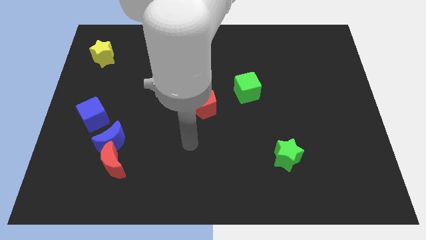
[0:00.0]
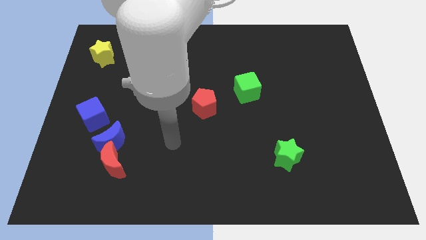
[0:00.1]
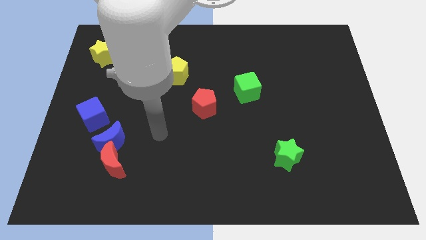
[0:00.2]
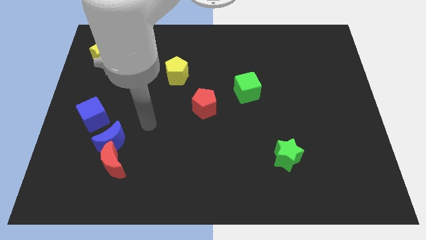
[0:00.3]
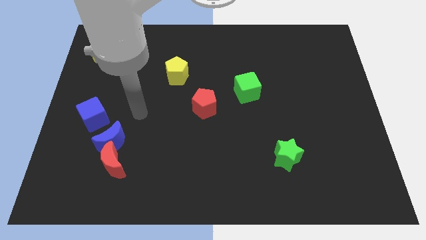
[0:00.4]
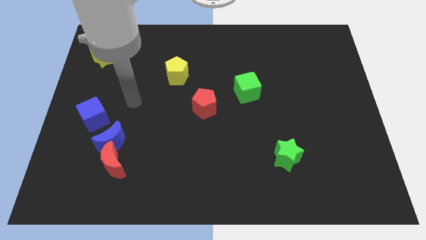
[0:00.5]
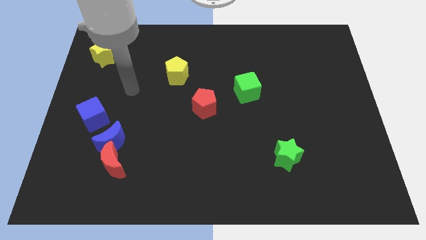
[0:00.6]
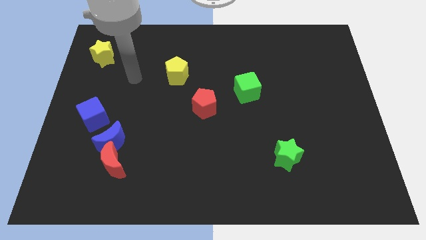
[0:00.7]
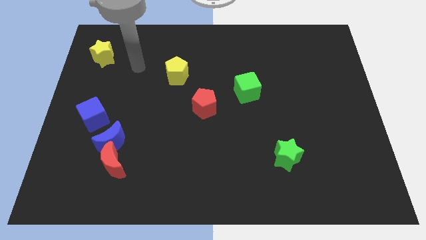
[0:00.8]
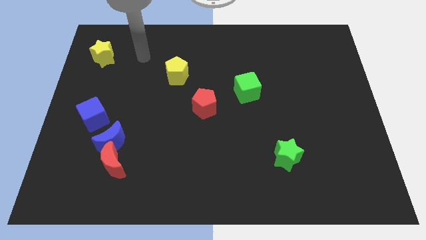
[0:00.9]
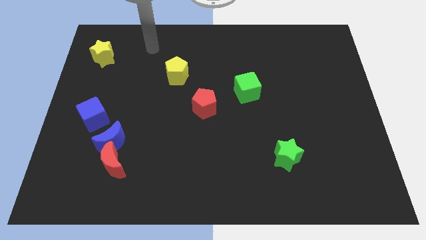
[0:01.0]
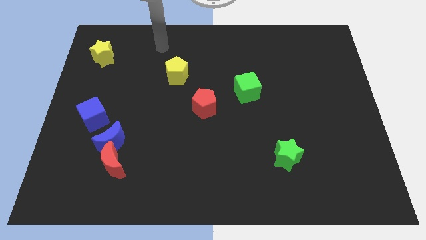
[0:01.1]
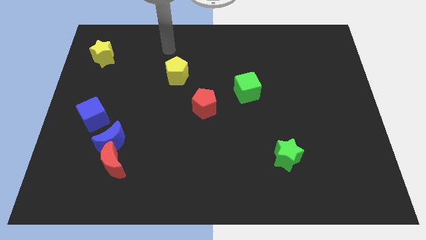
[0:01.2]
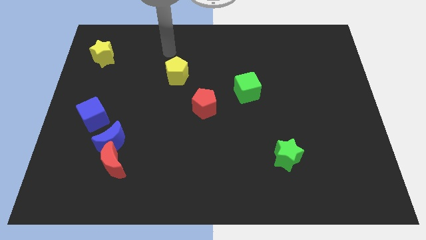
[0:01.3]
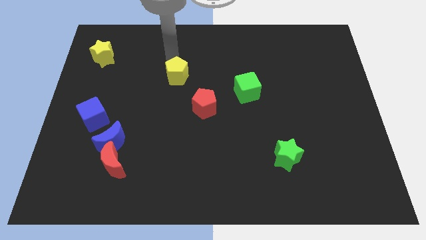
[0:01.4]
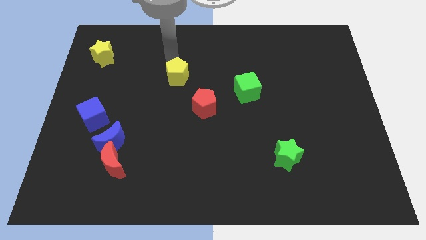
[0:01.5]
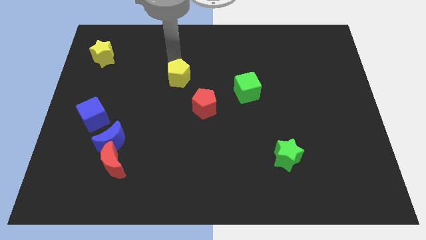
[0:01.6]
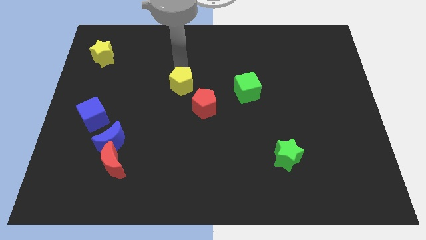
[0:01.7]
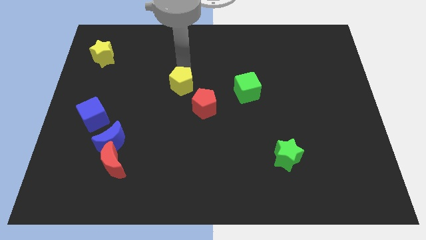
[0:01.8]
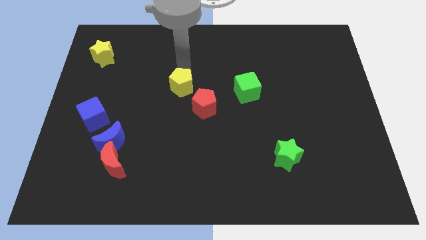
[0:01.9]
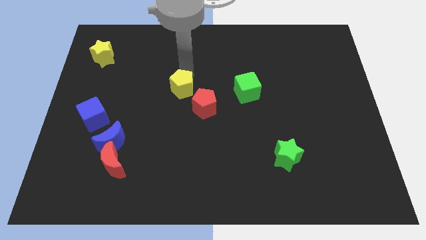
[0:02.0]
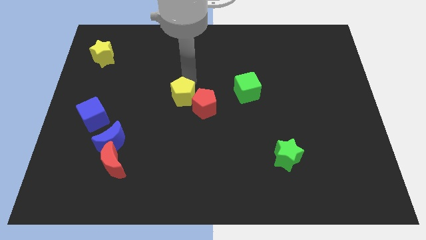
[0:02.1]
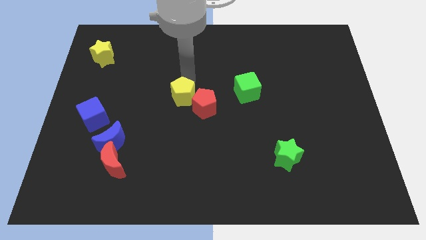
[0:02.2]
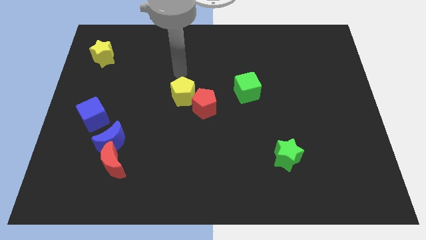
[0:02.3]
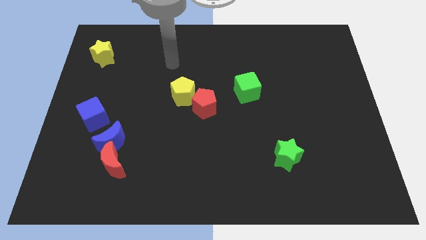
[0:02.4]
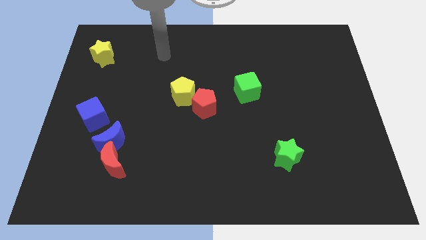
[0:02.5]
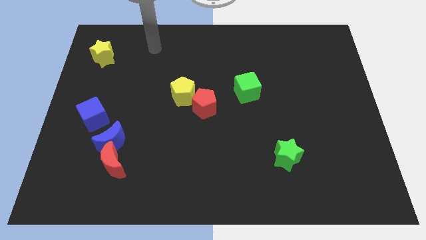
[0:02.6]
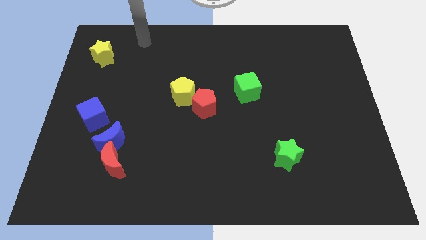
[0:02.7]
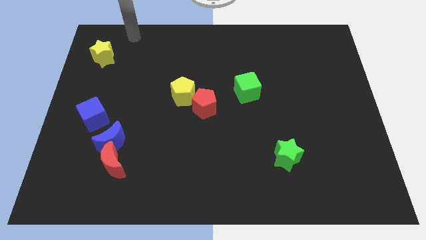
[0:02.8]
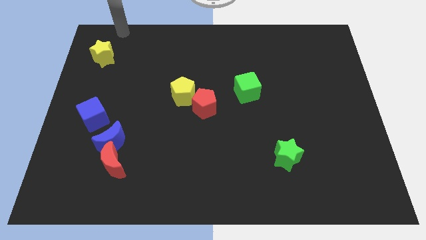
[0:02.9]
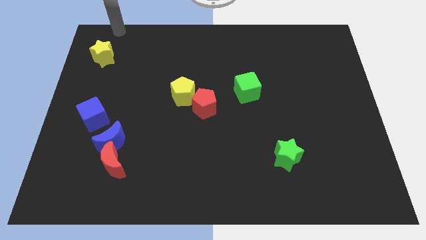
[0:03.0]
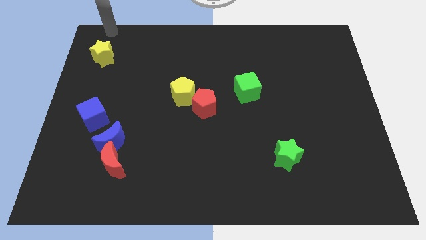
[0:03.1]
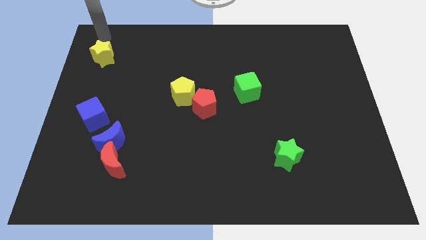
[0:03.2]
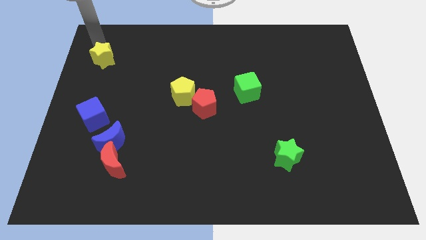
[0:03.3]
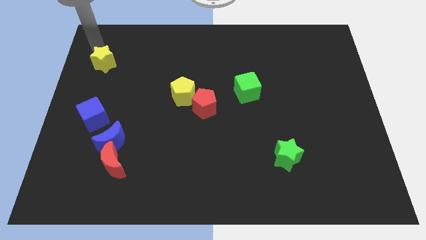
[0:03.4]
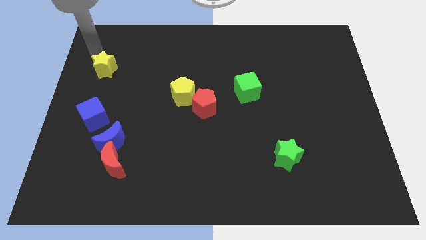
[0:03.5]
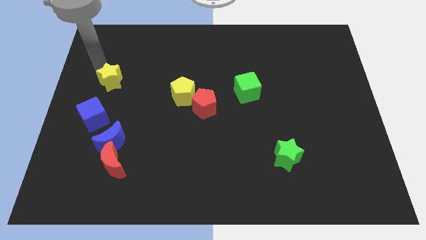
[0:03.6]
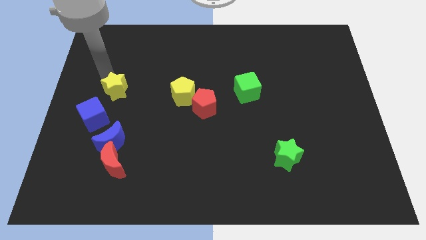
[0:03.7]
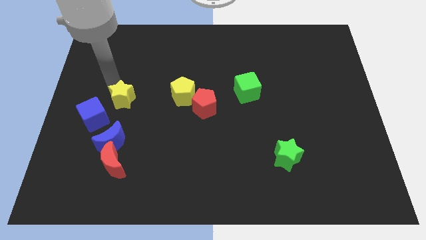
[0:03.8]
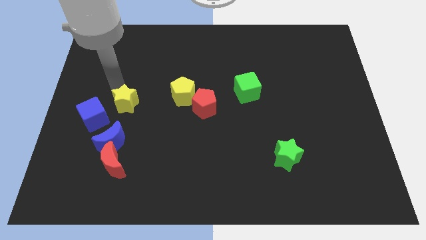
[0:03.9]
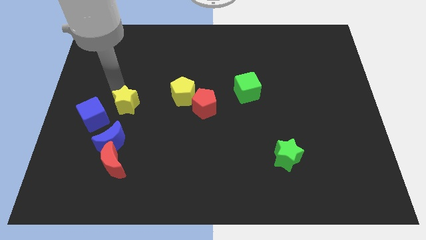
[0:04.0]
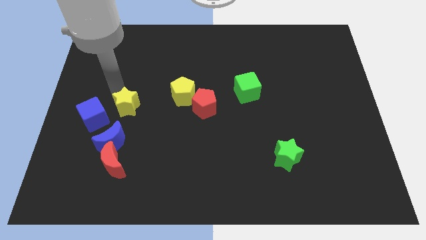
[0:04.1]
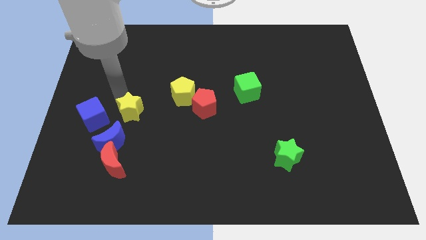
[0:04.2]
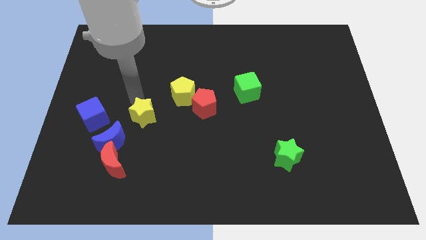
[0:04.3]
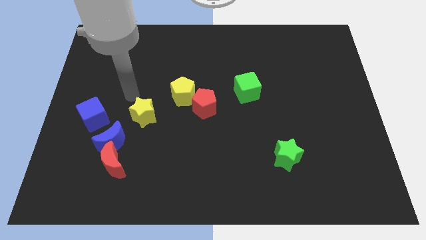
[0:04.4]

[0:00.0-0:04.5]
move the yellow star to the top side of the blue moon

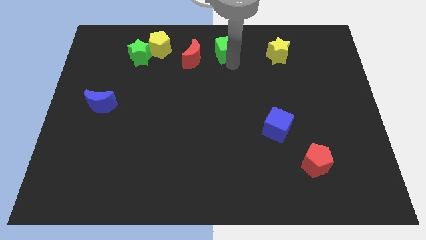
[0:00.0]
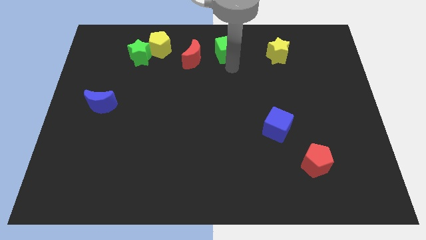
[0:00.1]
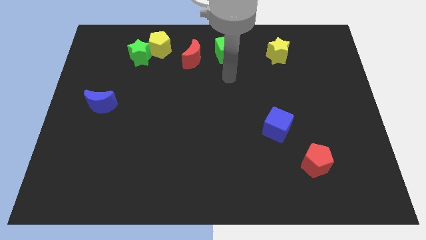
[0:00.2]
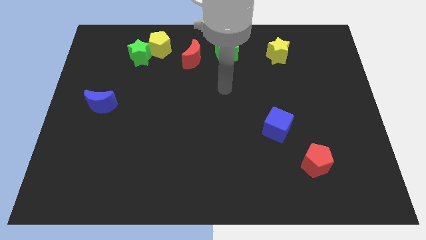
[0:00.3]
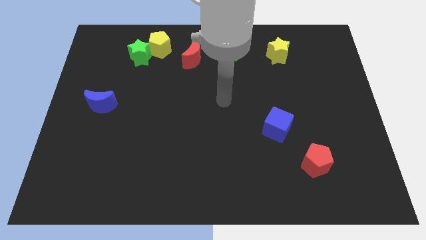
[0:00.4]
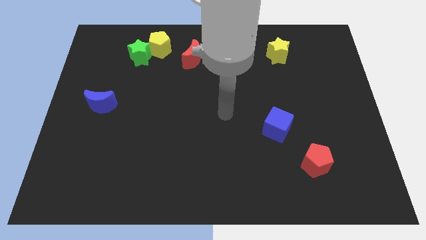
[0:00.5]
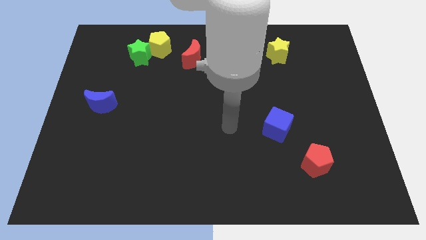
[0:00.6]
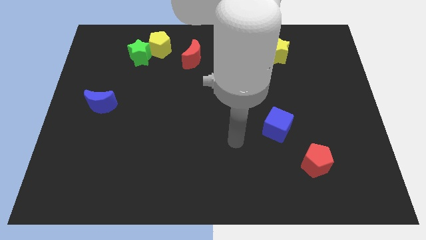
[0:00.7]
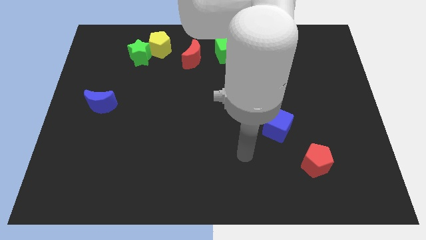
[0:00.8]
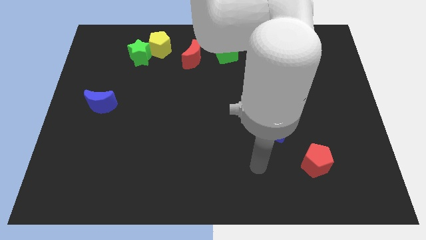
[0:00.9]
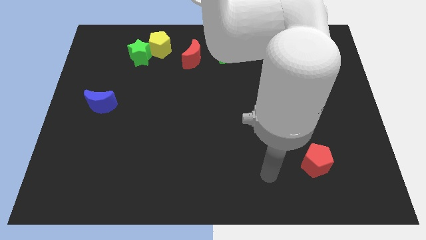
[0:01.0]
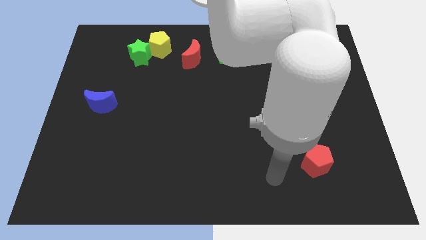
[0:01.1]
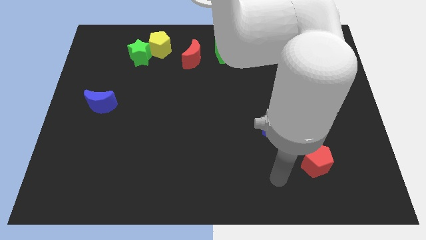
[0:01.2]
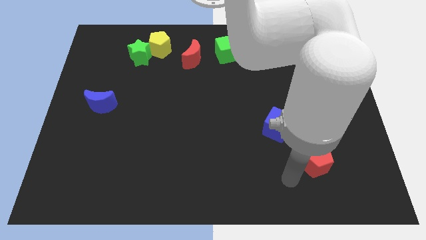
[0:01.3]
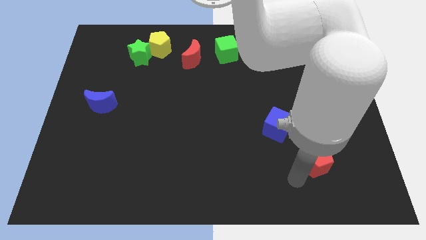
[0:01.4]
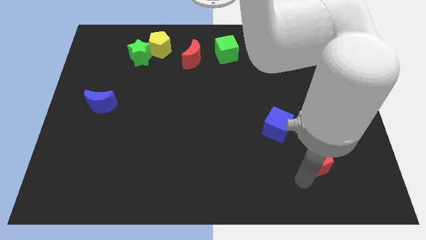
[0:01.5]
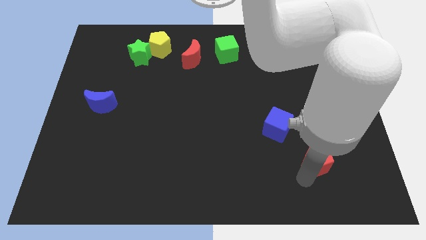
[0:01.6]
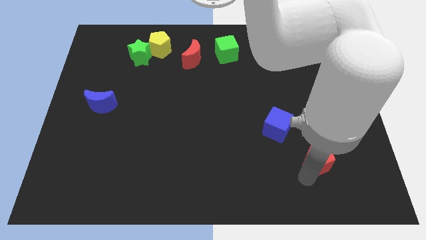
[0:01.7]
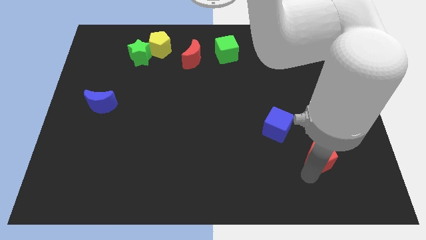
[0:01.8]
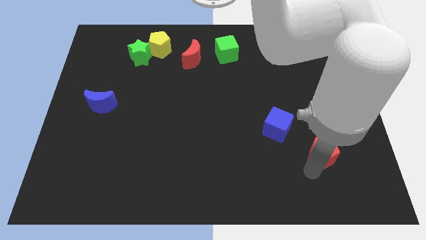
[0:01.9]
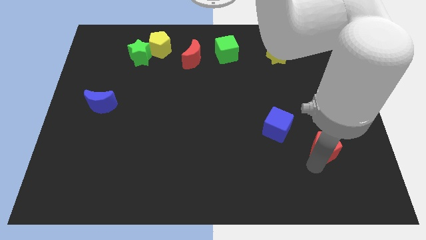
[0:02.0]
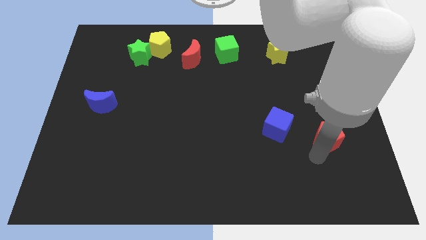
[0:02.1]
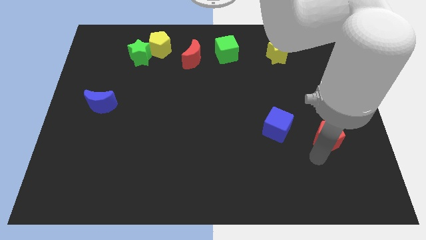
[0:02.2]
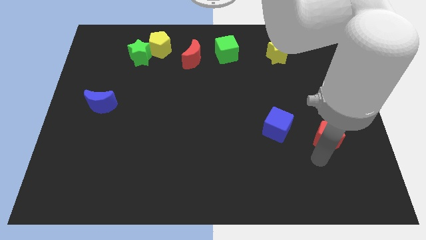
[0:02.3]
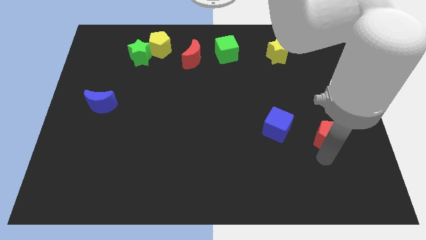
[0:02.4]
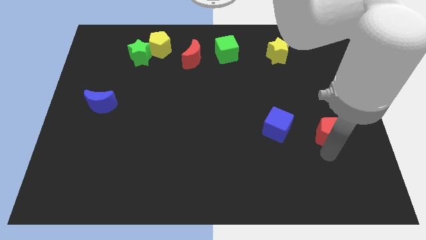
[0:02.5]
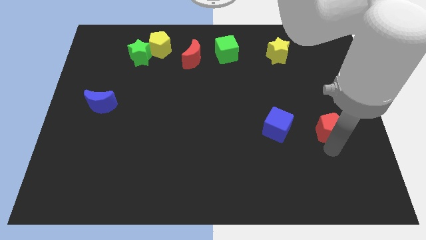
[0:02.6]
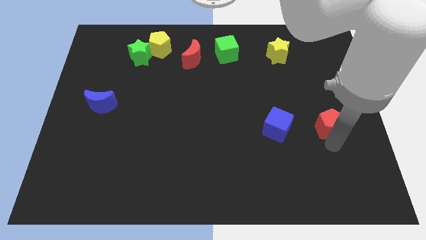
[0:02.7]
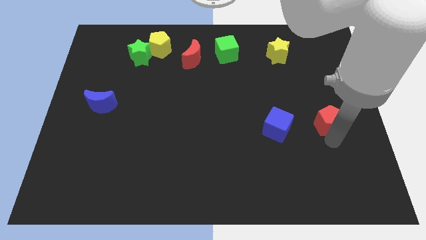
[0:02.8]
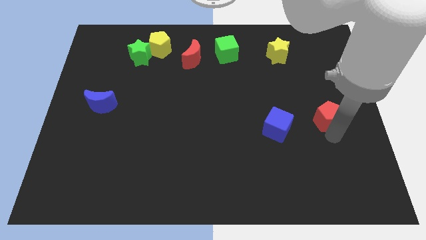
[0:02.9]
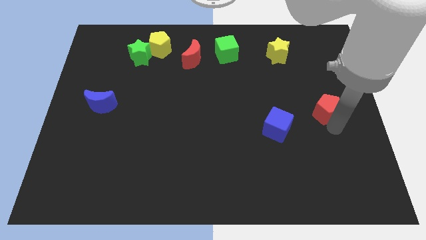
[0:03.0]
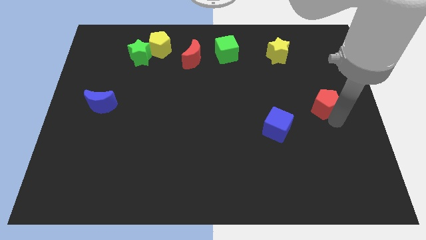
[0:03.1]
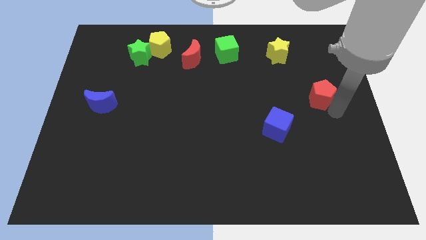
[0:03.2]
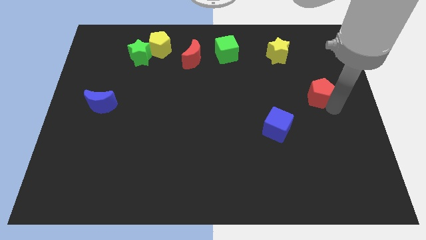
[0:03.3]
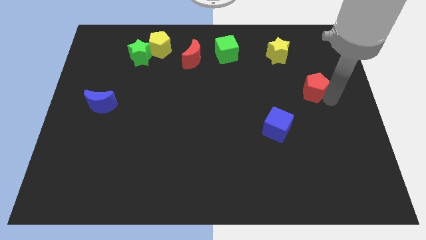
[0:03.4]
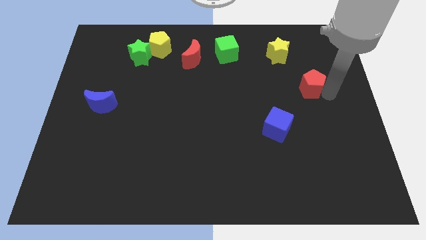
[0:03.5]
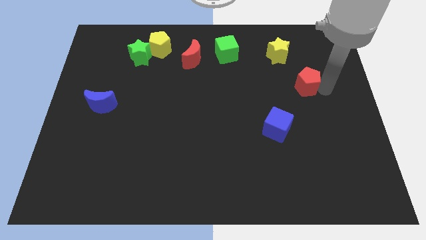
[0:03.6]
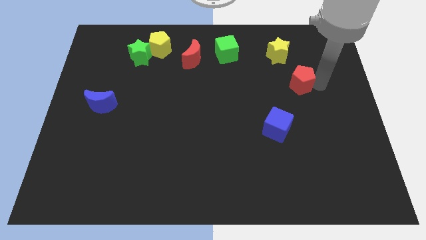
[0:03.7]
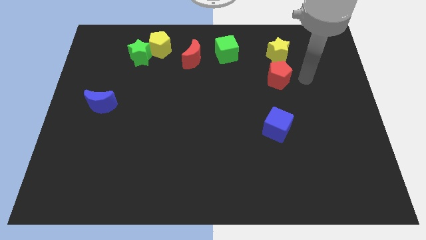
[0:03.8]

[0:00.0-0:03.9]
put the red crescent below the yellow star

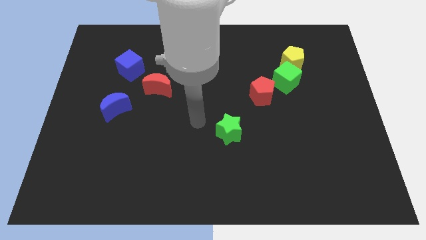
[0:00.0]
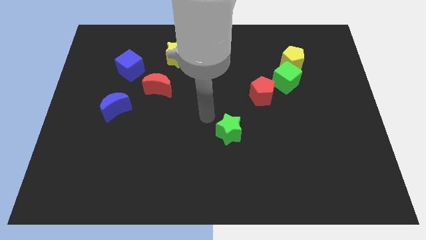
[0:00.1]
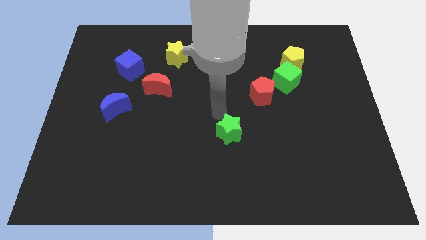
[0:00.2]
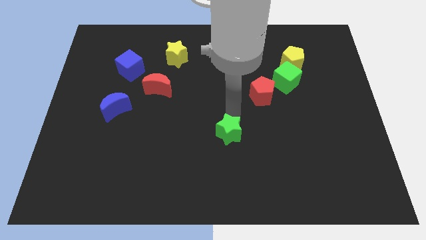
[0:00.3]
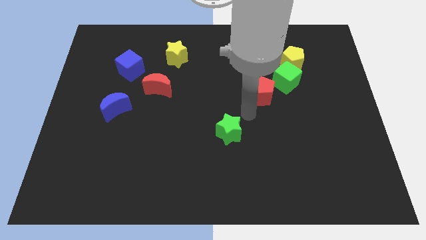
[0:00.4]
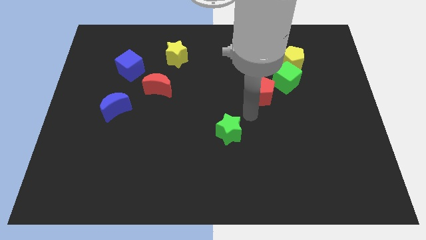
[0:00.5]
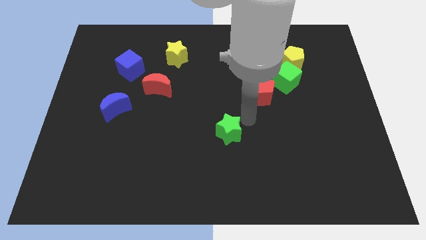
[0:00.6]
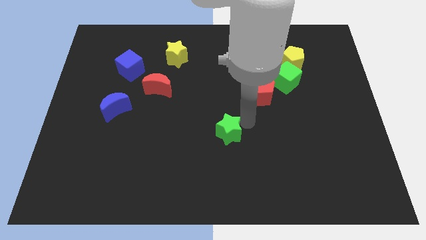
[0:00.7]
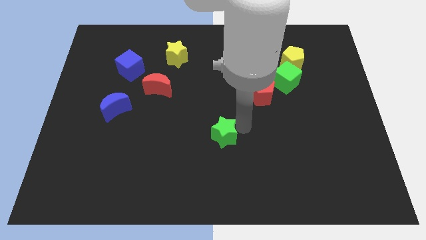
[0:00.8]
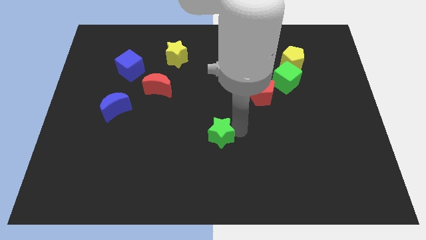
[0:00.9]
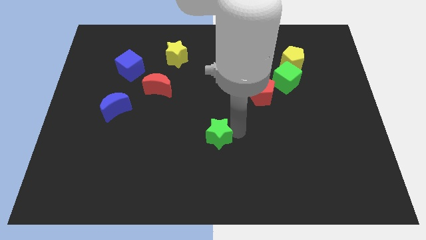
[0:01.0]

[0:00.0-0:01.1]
touch your arm on right side of green star
